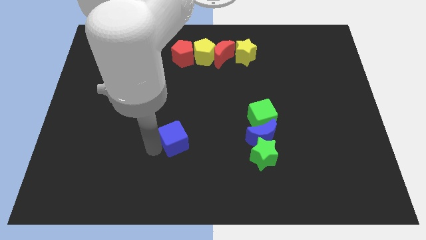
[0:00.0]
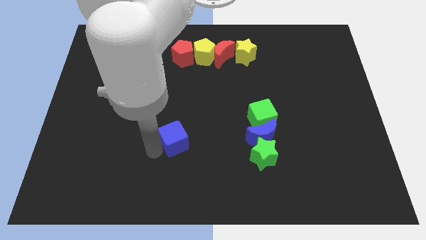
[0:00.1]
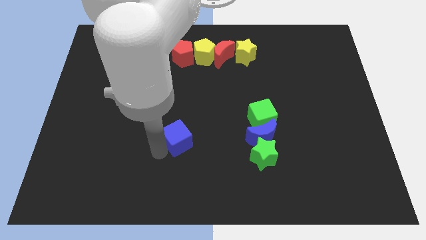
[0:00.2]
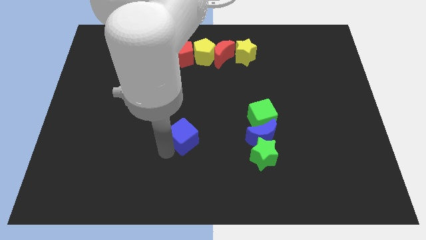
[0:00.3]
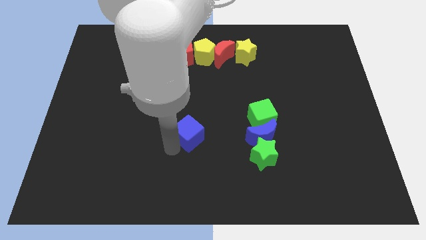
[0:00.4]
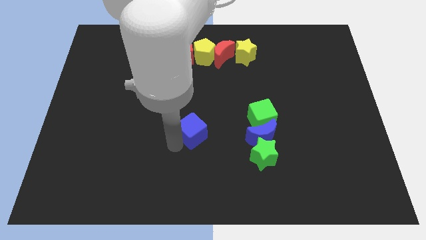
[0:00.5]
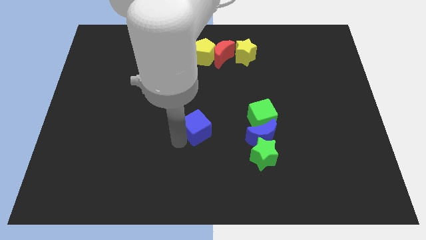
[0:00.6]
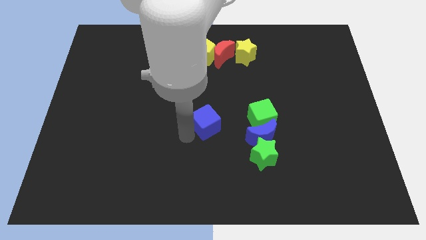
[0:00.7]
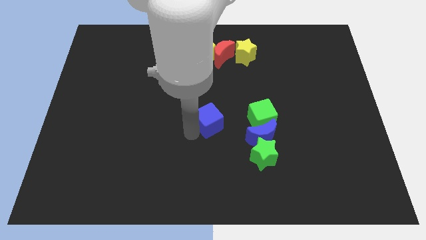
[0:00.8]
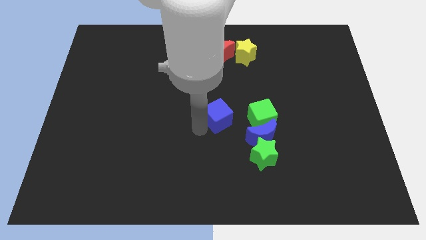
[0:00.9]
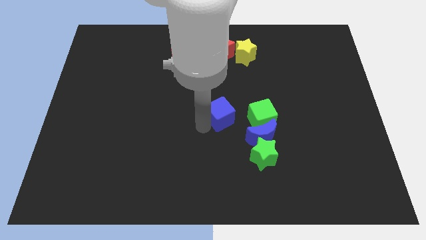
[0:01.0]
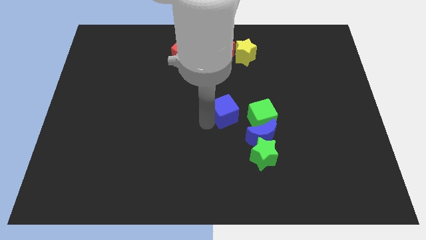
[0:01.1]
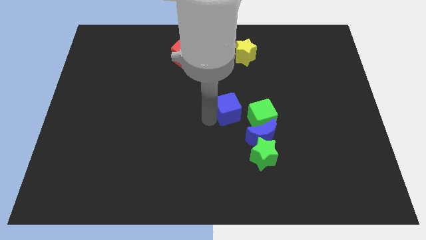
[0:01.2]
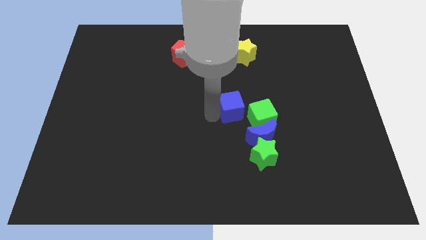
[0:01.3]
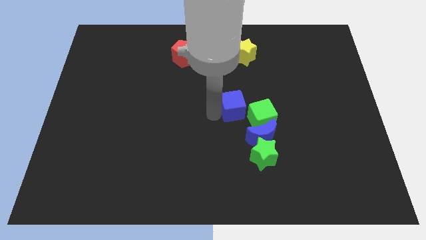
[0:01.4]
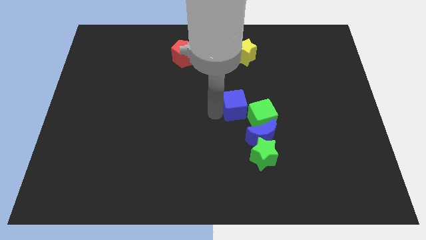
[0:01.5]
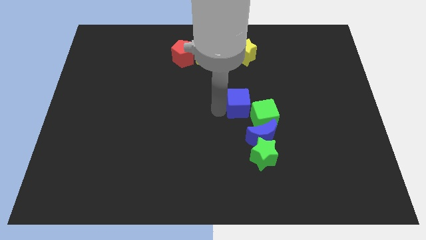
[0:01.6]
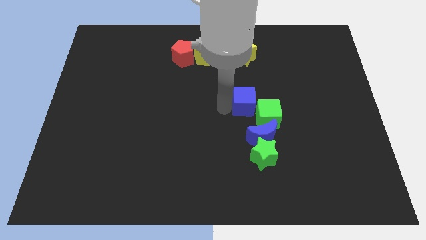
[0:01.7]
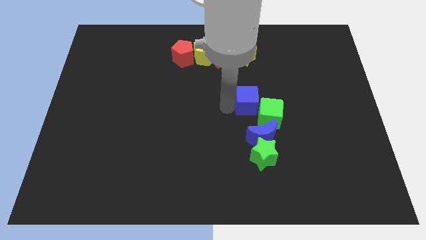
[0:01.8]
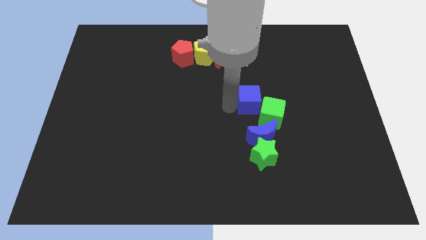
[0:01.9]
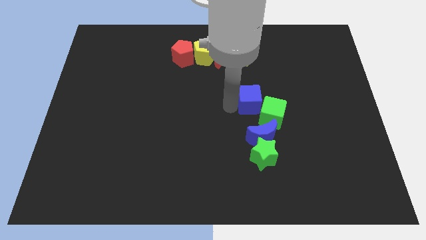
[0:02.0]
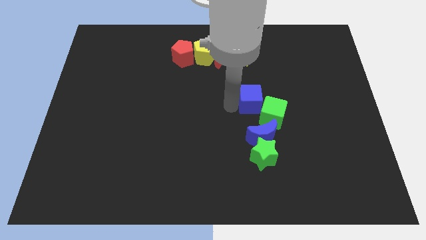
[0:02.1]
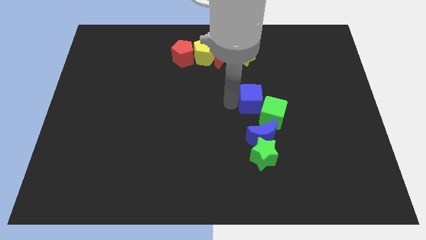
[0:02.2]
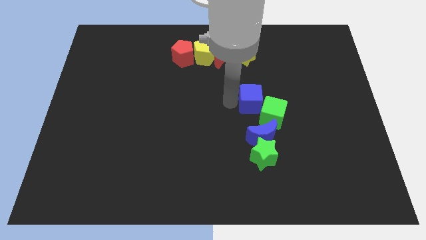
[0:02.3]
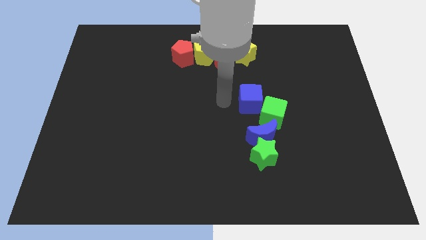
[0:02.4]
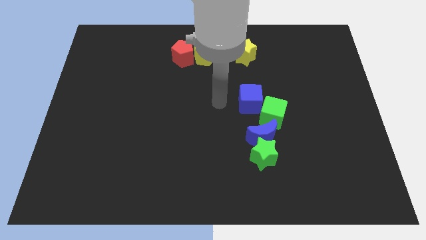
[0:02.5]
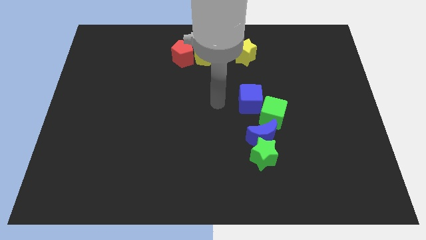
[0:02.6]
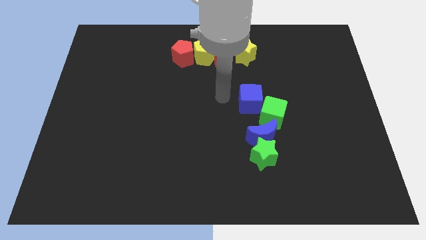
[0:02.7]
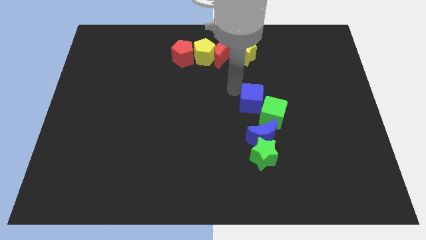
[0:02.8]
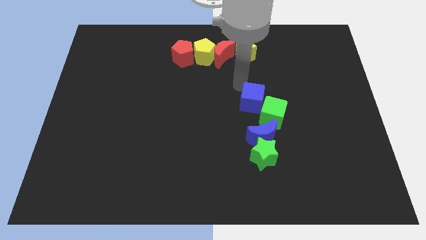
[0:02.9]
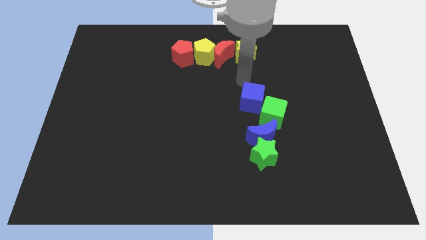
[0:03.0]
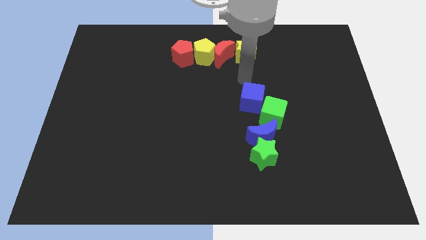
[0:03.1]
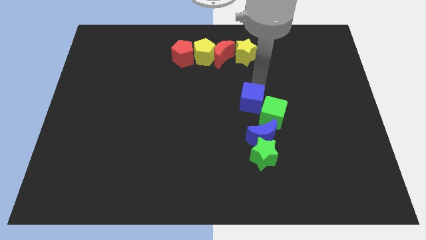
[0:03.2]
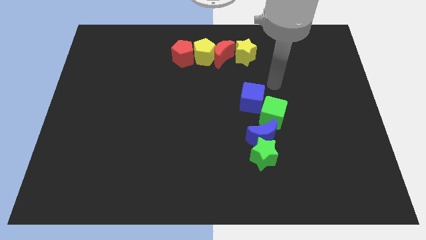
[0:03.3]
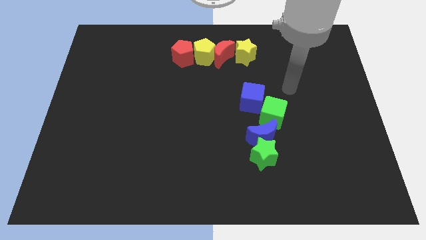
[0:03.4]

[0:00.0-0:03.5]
push the blue cube into the green cube

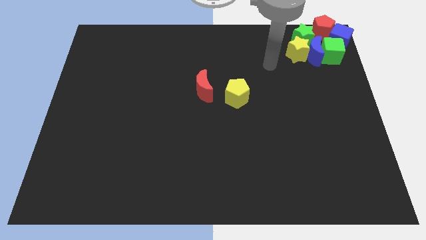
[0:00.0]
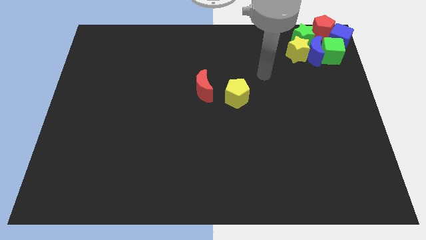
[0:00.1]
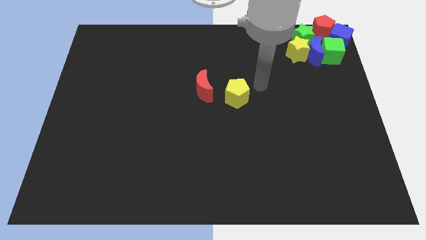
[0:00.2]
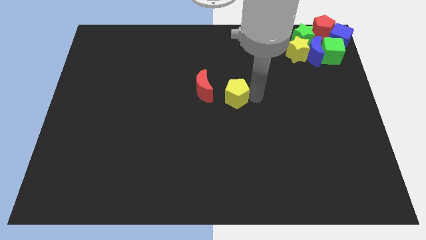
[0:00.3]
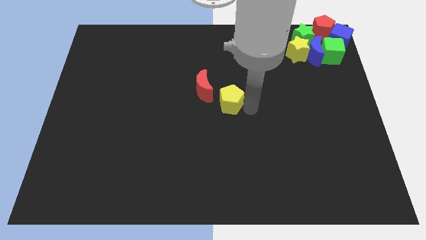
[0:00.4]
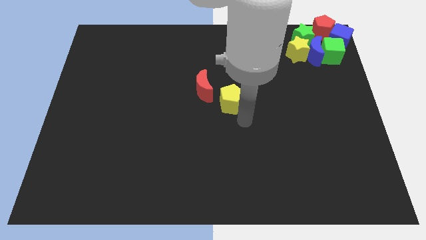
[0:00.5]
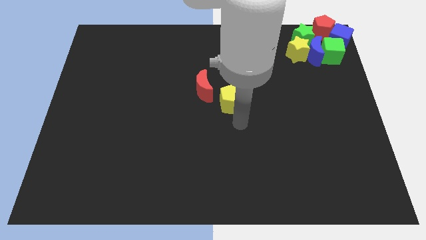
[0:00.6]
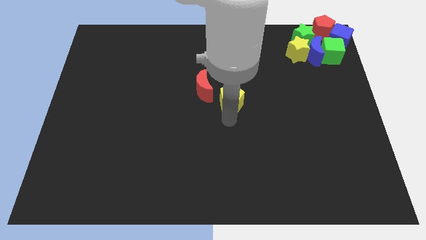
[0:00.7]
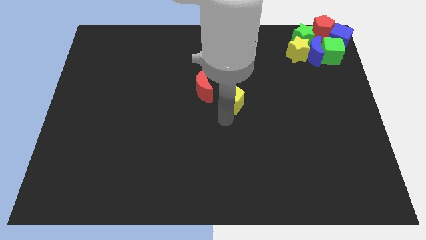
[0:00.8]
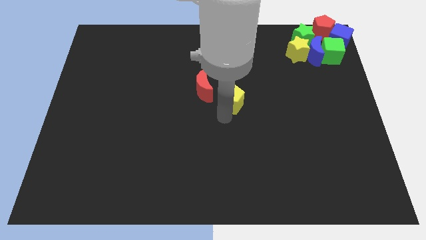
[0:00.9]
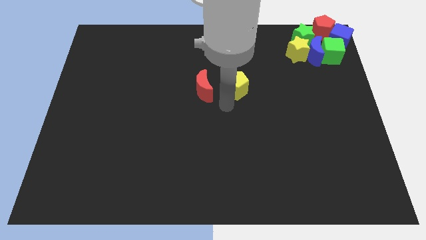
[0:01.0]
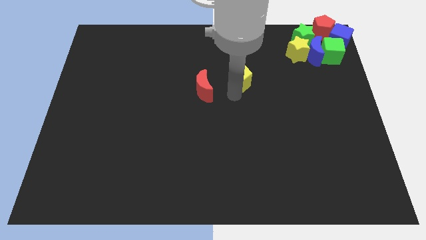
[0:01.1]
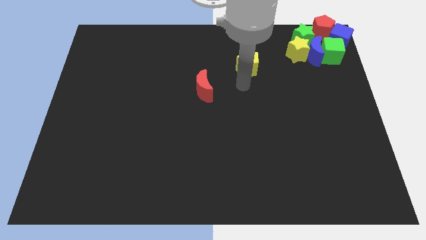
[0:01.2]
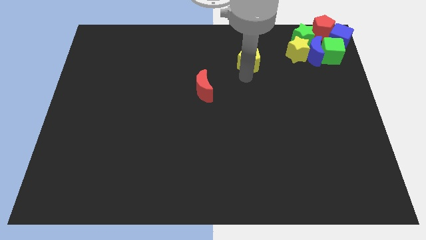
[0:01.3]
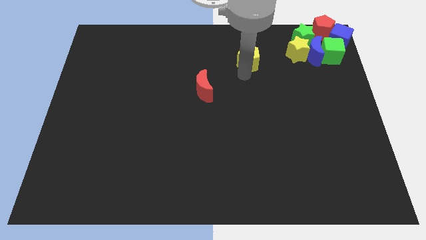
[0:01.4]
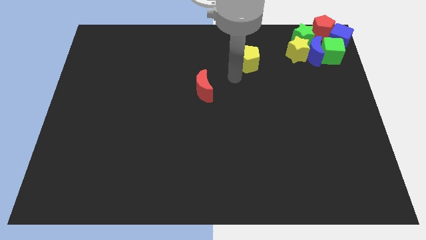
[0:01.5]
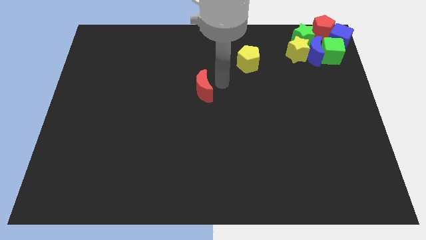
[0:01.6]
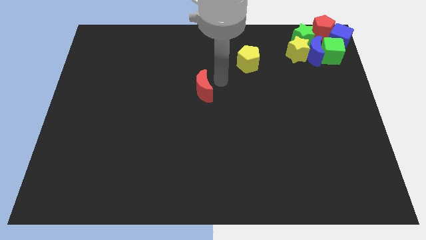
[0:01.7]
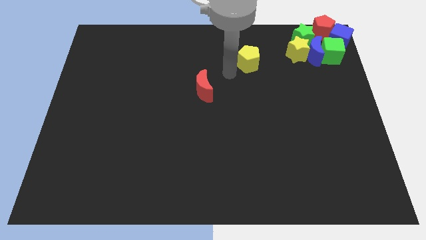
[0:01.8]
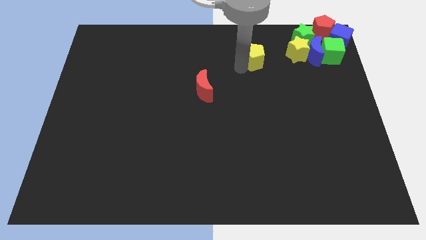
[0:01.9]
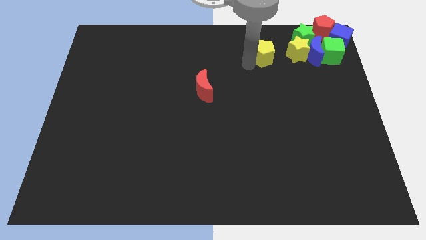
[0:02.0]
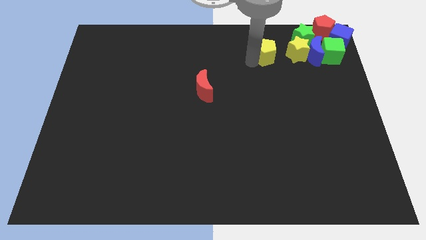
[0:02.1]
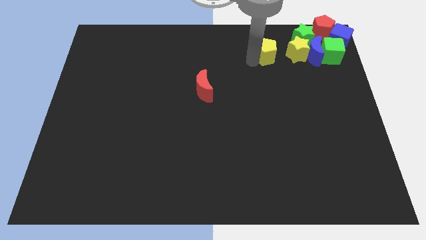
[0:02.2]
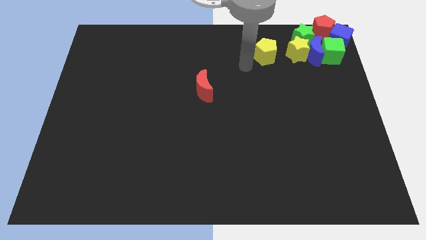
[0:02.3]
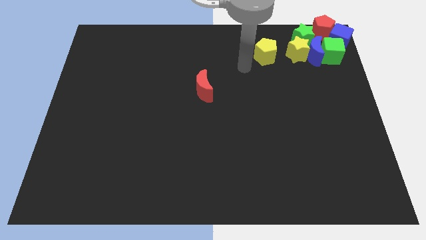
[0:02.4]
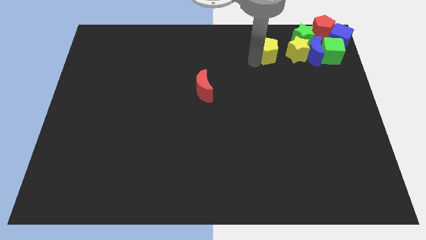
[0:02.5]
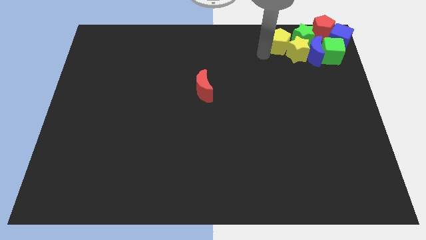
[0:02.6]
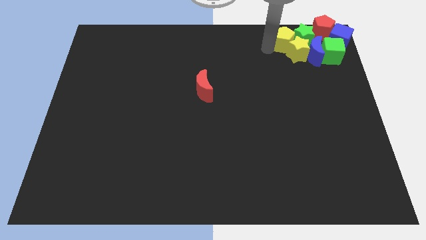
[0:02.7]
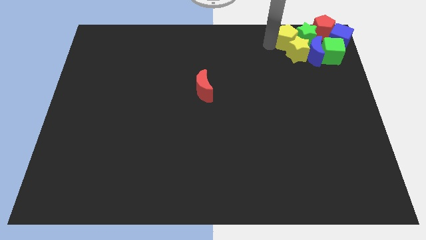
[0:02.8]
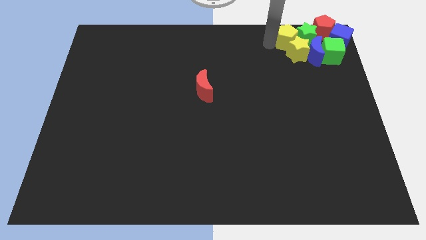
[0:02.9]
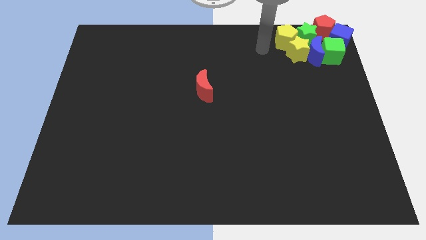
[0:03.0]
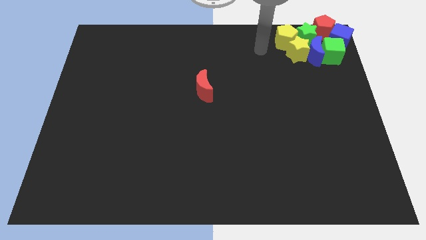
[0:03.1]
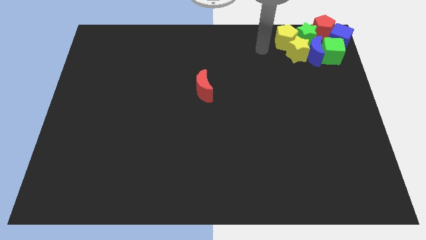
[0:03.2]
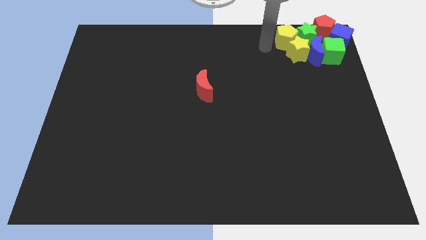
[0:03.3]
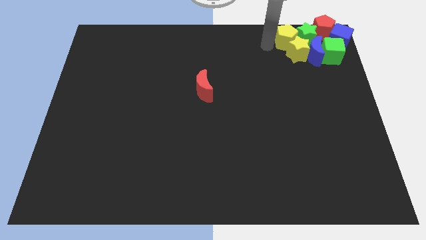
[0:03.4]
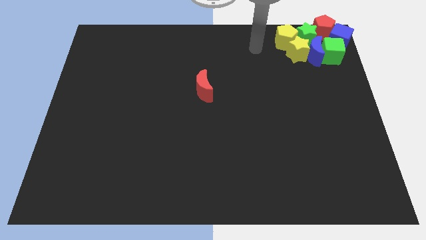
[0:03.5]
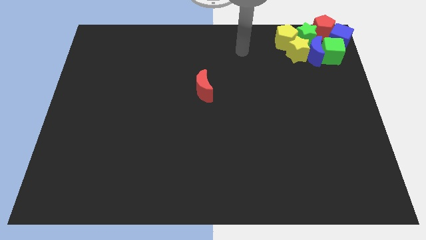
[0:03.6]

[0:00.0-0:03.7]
push the yellow pentagon into the green star

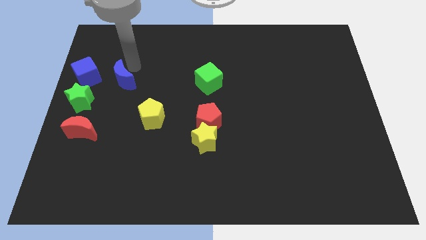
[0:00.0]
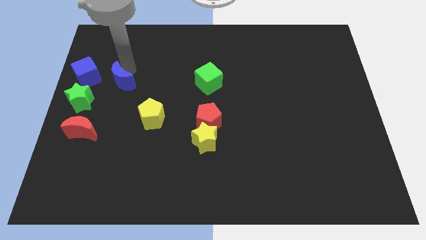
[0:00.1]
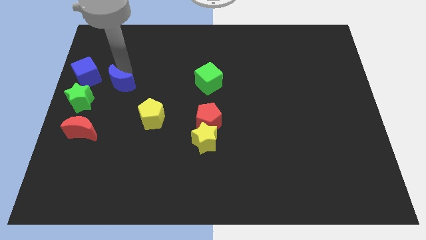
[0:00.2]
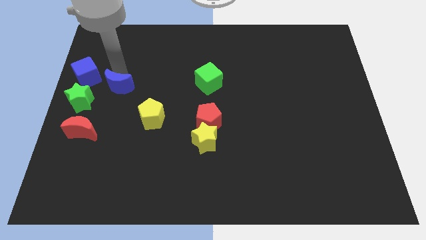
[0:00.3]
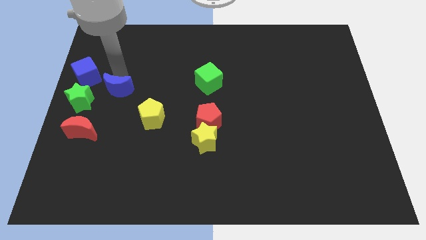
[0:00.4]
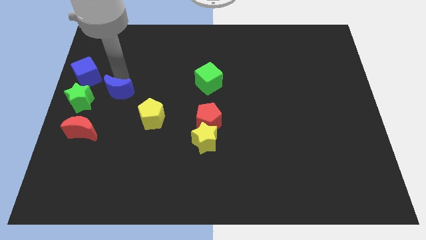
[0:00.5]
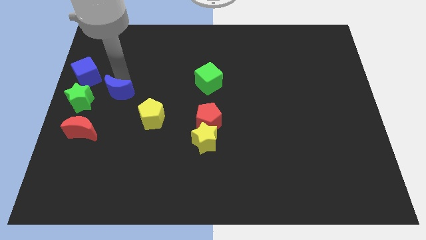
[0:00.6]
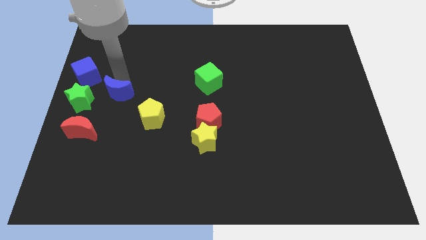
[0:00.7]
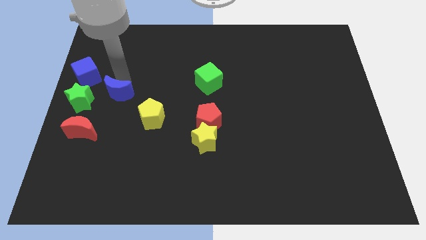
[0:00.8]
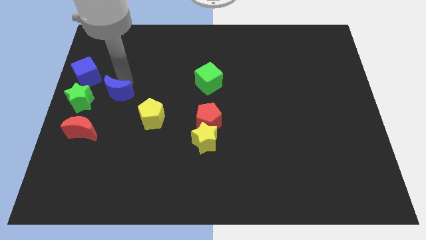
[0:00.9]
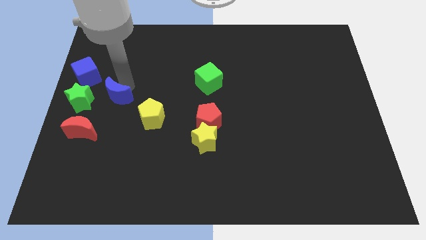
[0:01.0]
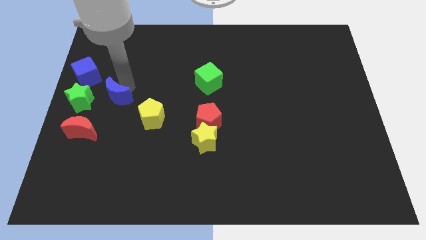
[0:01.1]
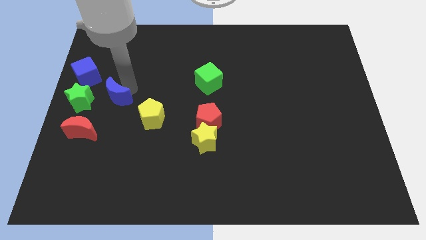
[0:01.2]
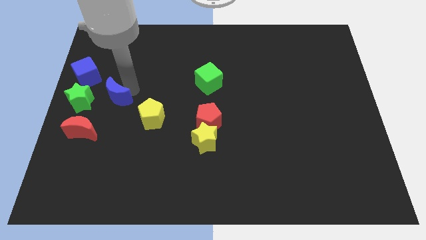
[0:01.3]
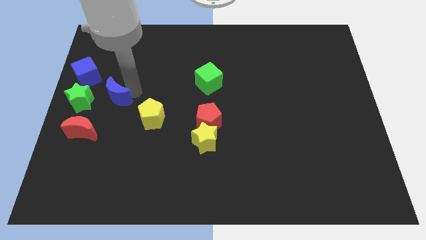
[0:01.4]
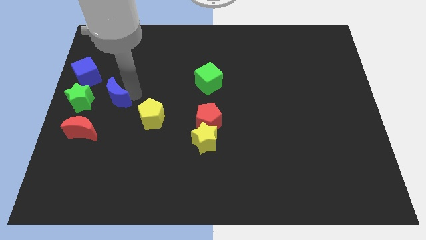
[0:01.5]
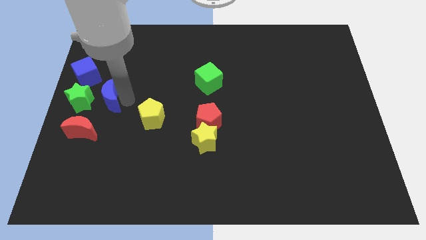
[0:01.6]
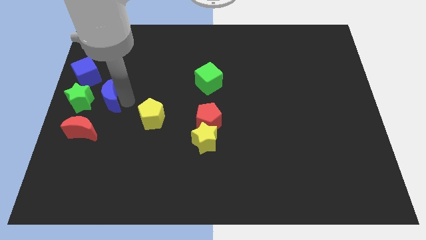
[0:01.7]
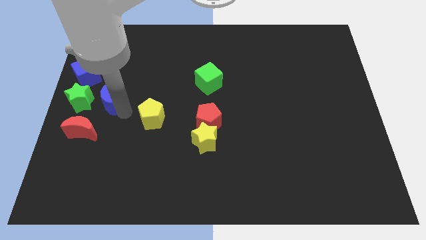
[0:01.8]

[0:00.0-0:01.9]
move the blue crescent parallel right to the green star
